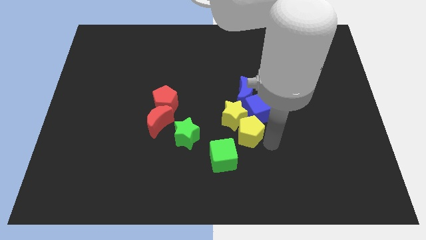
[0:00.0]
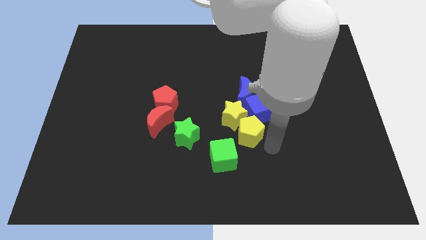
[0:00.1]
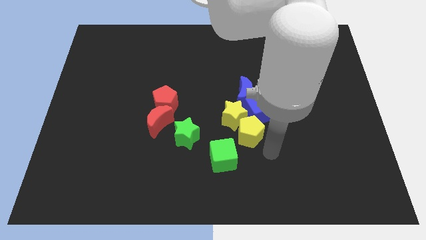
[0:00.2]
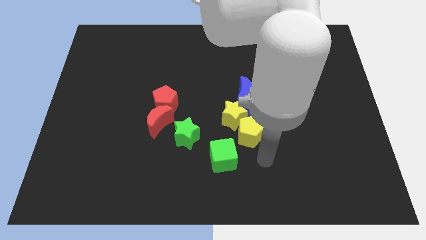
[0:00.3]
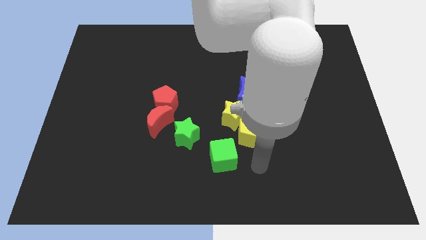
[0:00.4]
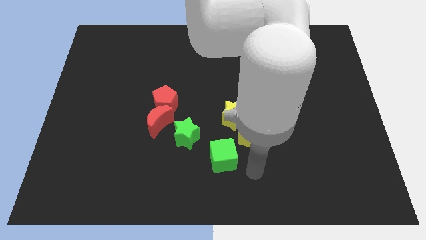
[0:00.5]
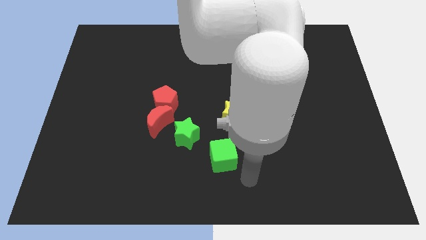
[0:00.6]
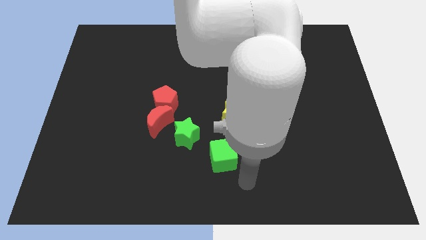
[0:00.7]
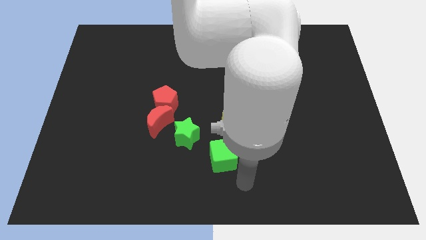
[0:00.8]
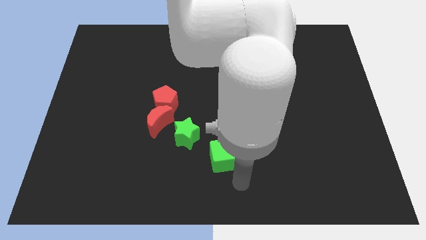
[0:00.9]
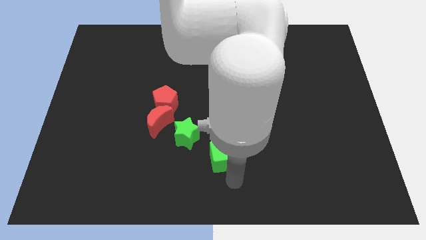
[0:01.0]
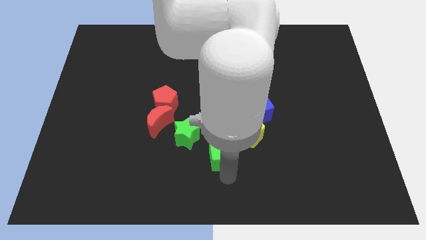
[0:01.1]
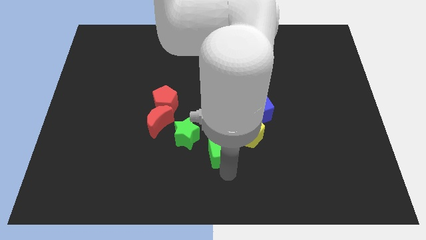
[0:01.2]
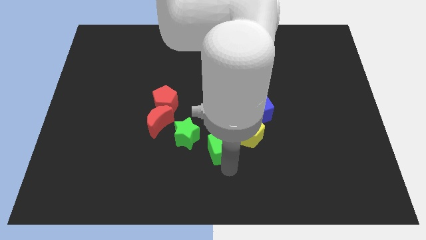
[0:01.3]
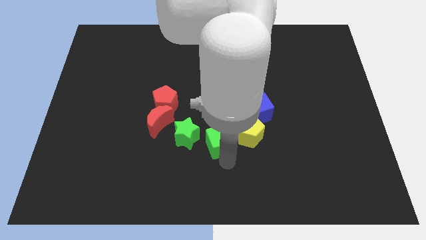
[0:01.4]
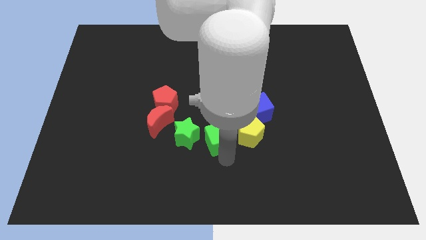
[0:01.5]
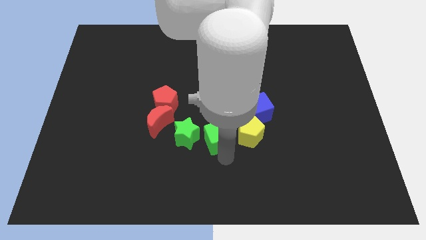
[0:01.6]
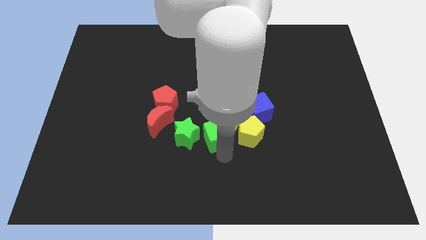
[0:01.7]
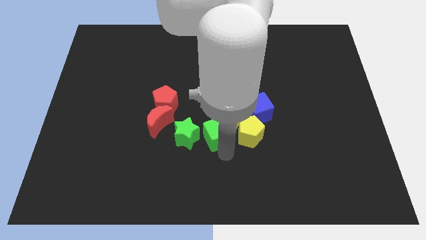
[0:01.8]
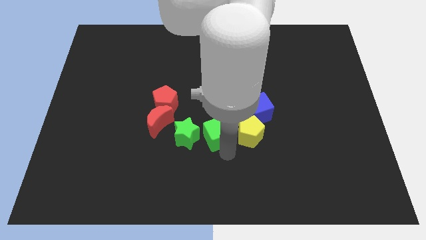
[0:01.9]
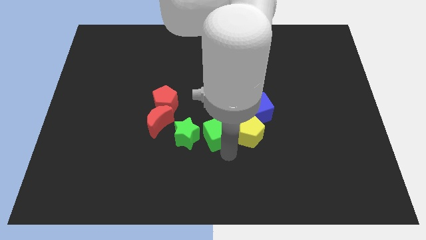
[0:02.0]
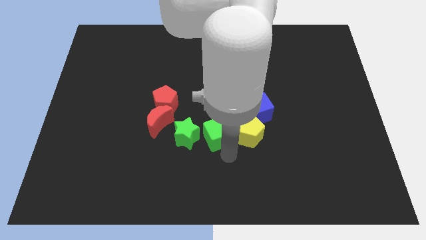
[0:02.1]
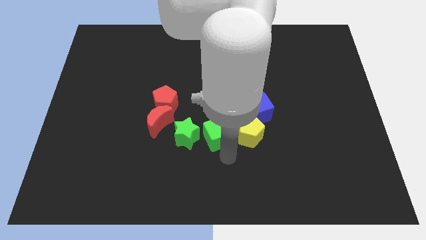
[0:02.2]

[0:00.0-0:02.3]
place the green cube right to the green star

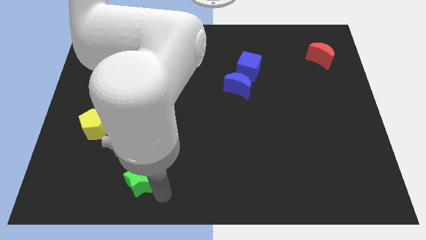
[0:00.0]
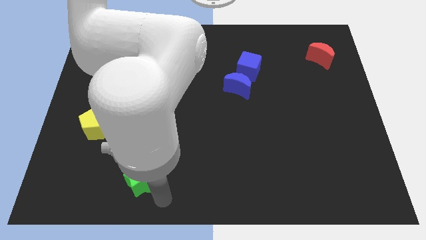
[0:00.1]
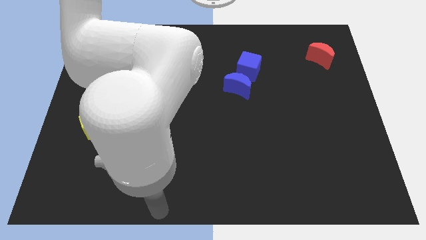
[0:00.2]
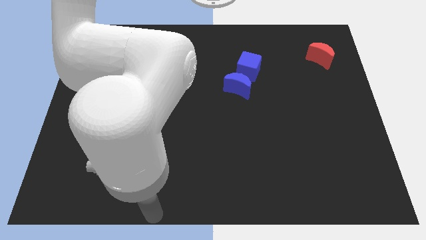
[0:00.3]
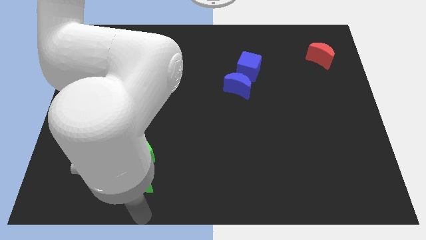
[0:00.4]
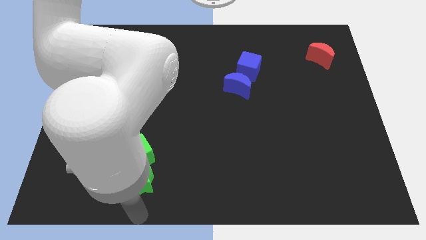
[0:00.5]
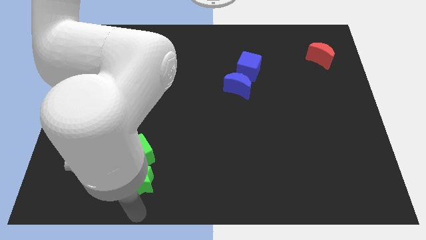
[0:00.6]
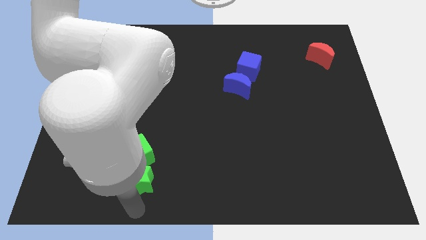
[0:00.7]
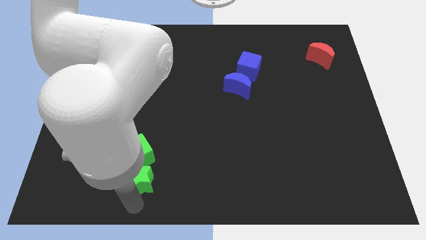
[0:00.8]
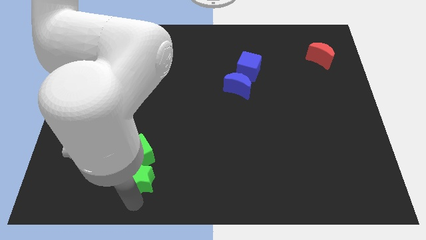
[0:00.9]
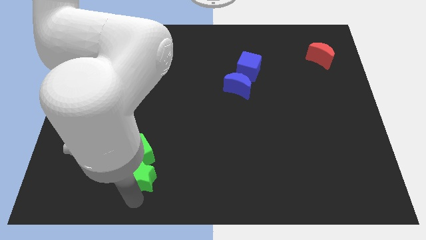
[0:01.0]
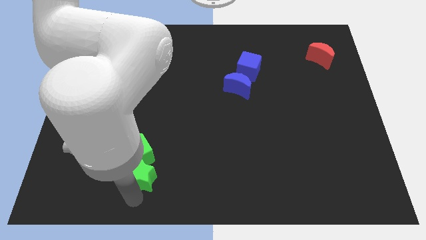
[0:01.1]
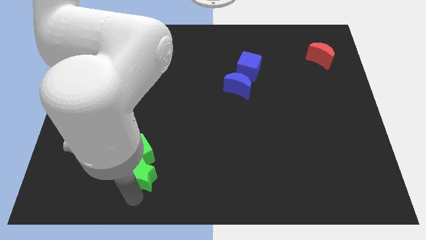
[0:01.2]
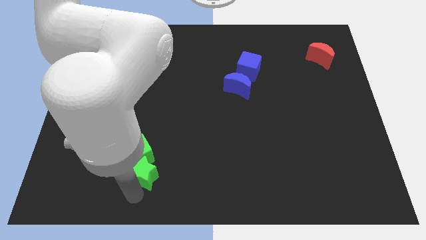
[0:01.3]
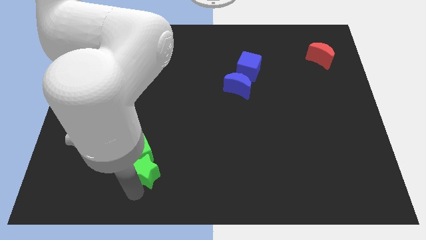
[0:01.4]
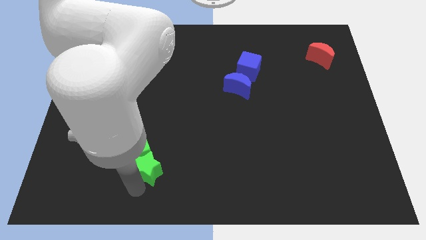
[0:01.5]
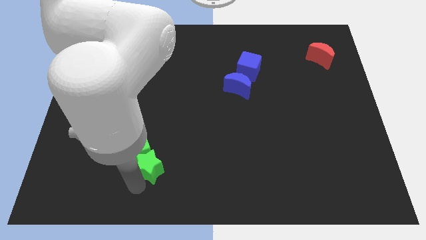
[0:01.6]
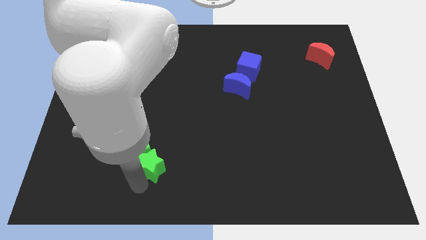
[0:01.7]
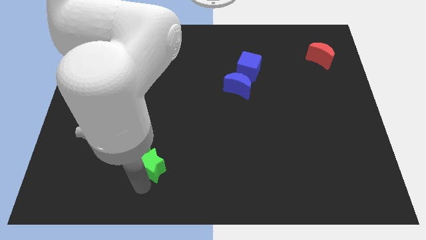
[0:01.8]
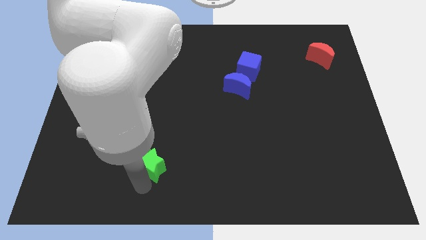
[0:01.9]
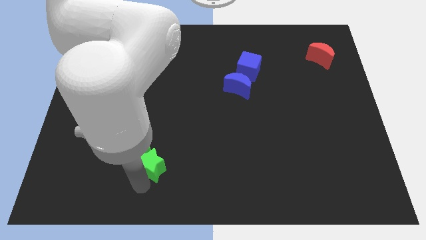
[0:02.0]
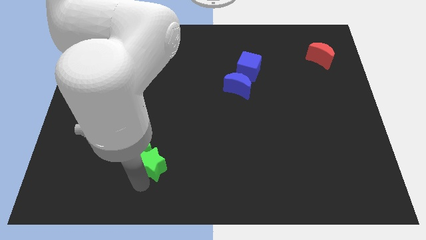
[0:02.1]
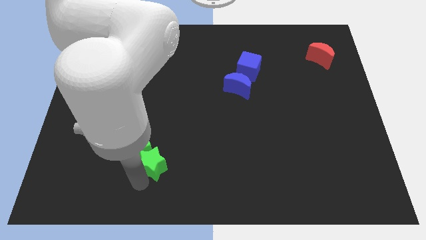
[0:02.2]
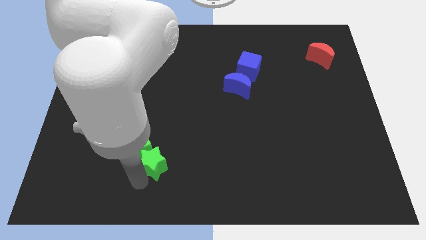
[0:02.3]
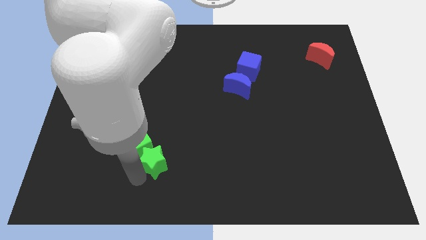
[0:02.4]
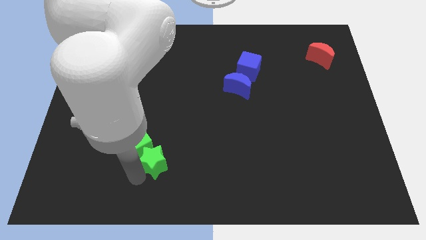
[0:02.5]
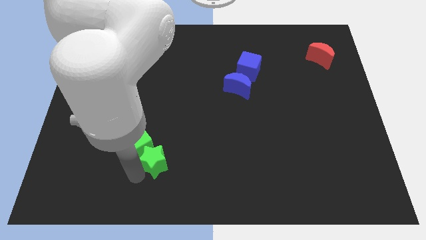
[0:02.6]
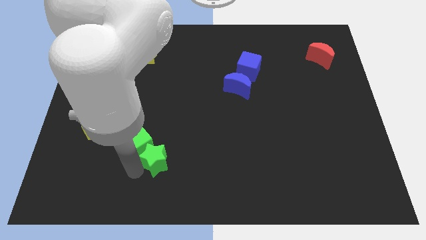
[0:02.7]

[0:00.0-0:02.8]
move the green star slightly to the top

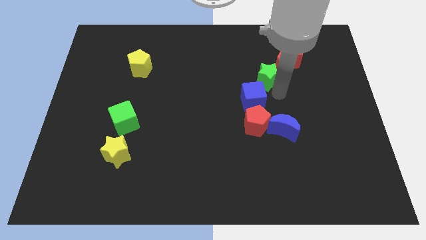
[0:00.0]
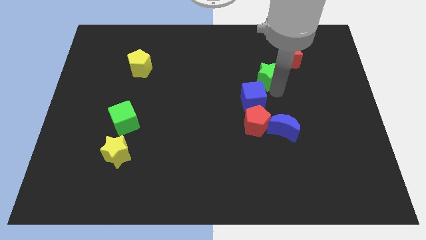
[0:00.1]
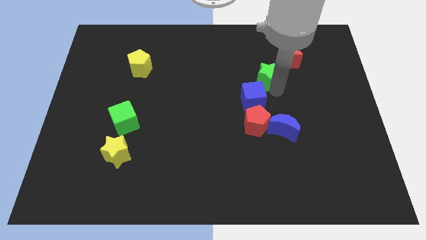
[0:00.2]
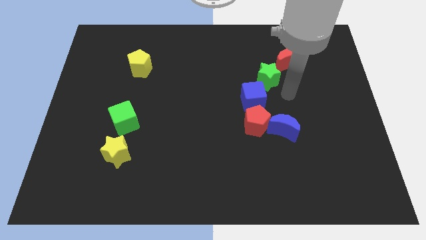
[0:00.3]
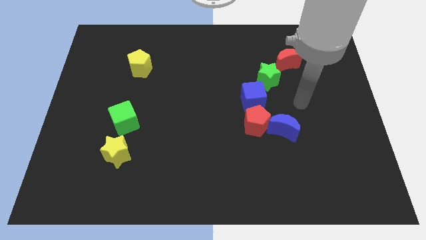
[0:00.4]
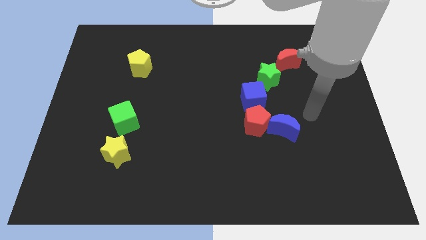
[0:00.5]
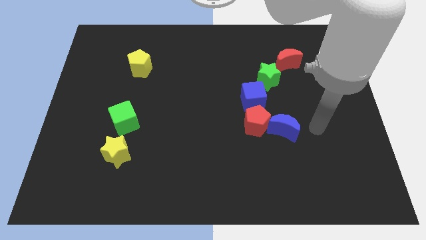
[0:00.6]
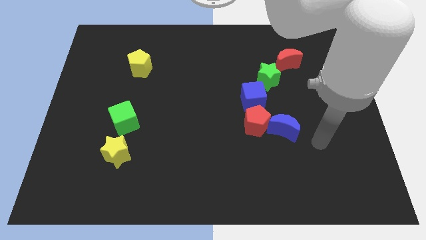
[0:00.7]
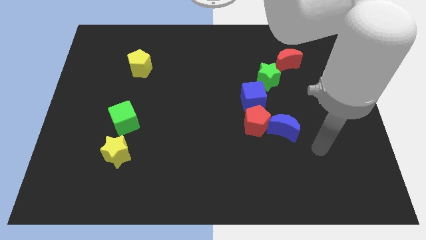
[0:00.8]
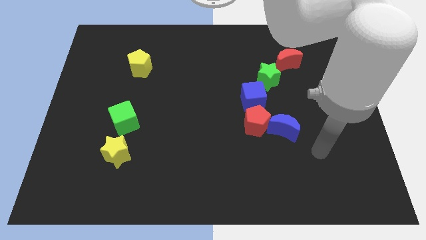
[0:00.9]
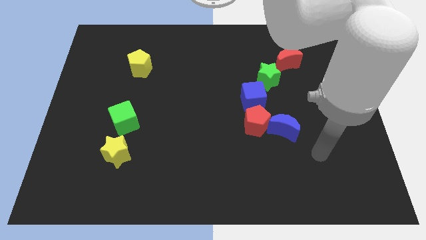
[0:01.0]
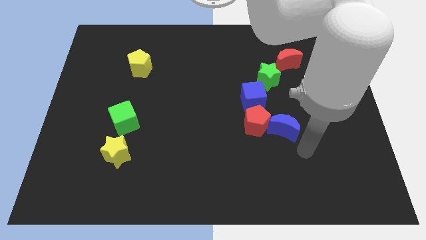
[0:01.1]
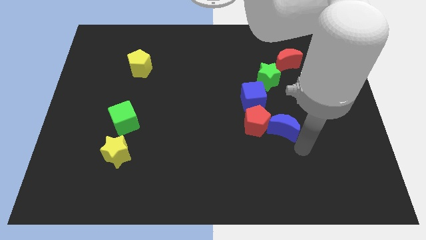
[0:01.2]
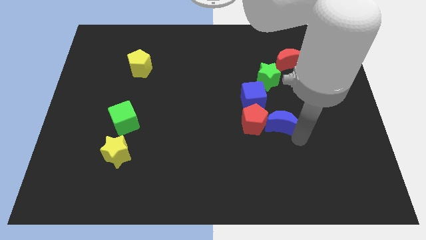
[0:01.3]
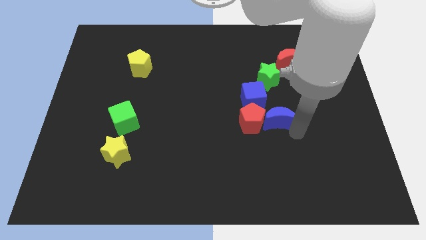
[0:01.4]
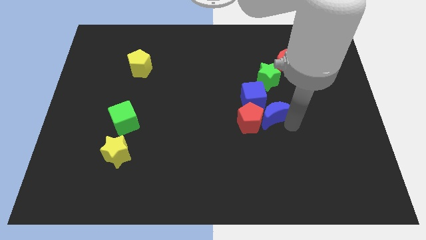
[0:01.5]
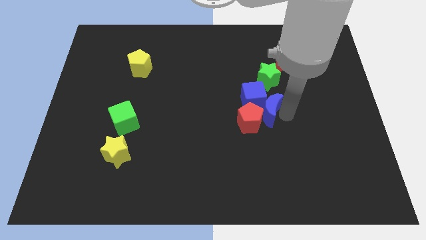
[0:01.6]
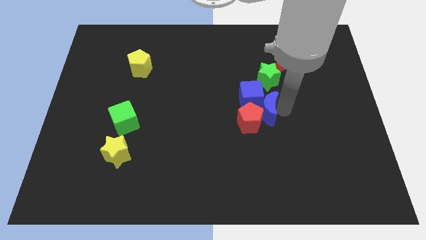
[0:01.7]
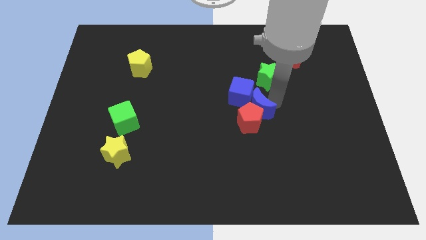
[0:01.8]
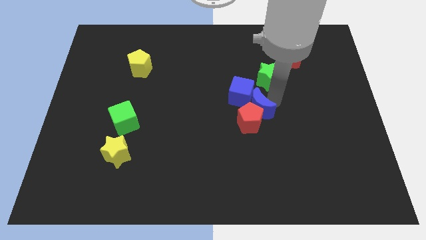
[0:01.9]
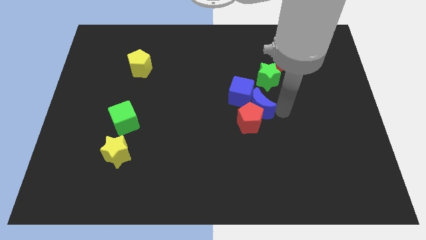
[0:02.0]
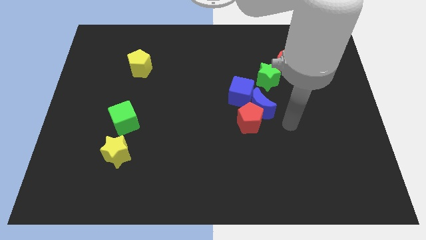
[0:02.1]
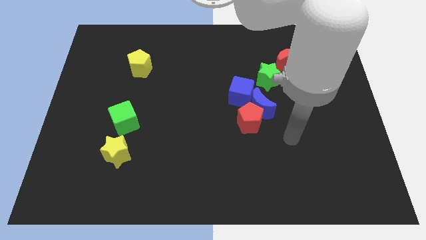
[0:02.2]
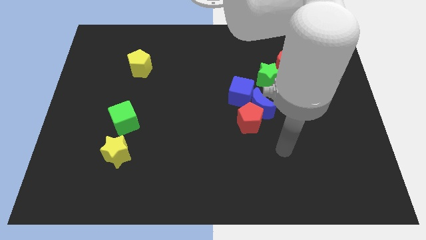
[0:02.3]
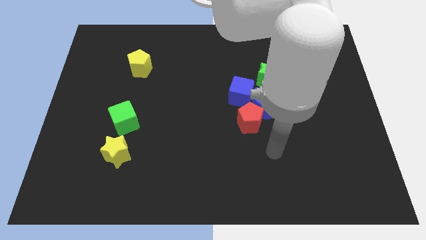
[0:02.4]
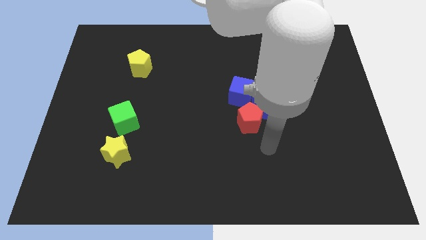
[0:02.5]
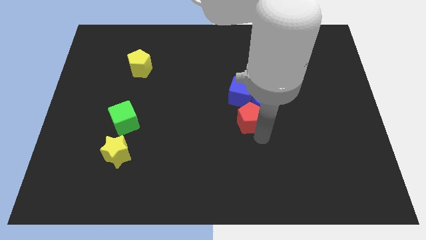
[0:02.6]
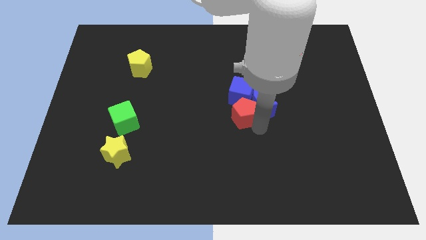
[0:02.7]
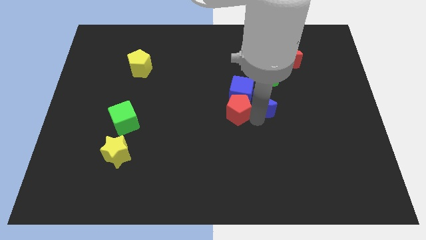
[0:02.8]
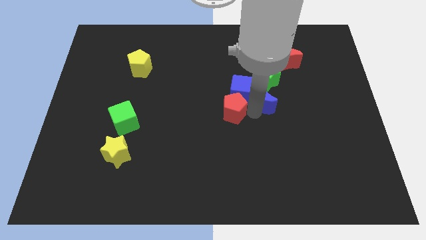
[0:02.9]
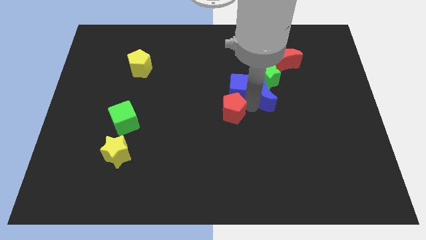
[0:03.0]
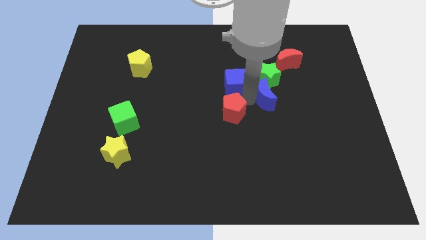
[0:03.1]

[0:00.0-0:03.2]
slightly move blue blocks diagonally up

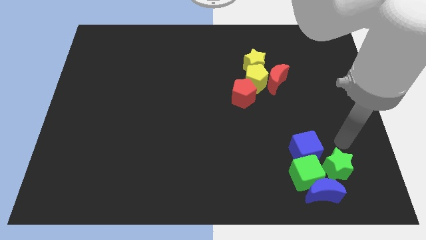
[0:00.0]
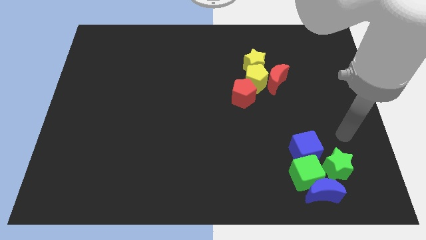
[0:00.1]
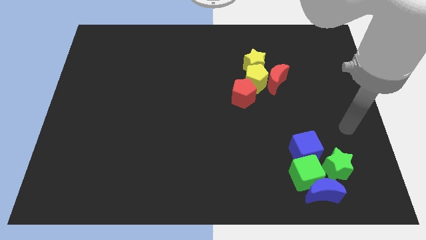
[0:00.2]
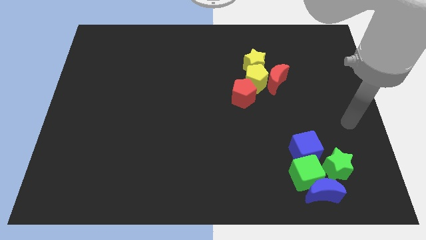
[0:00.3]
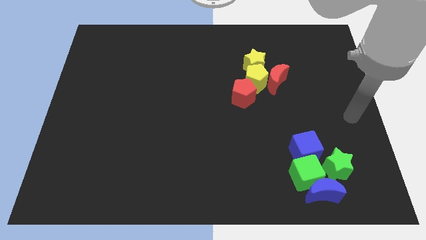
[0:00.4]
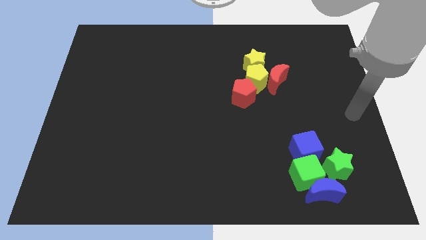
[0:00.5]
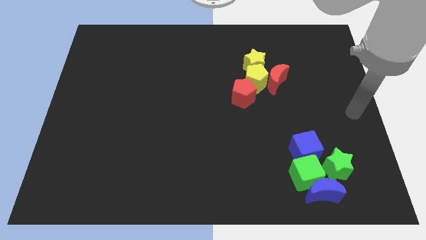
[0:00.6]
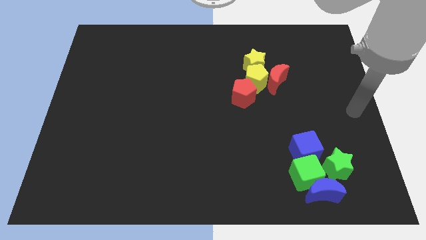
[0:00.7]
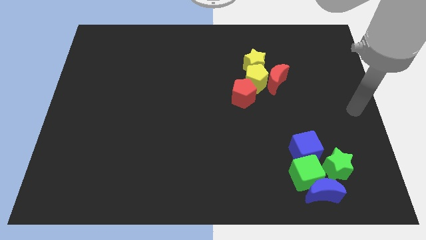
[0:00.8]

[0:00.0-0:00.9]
move your arm away from the group of blocks
